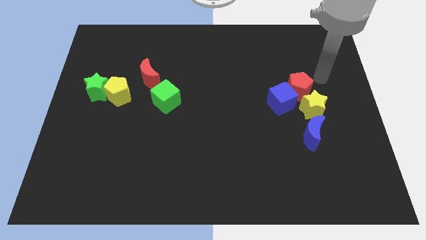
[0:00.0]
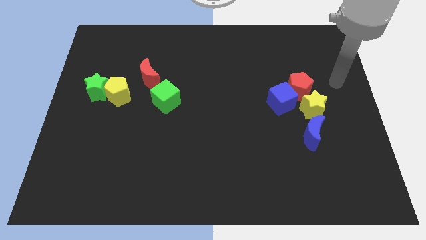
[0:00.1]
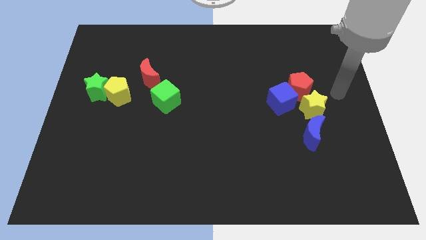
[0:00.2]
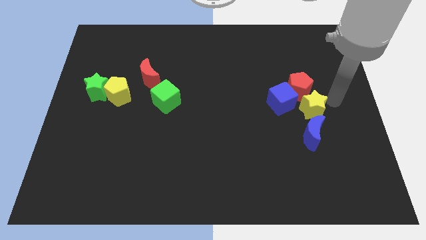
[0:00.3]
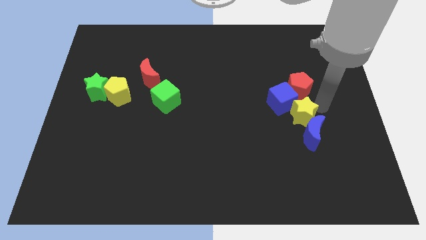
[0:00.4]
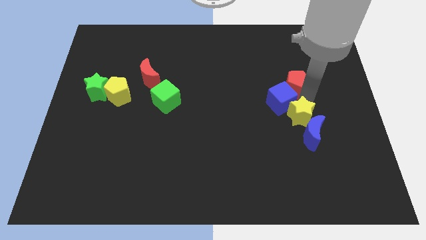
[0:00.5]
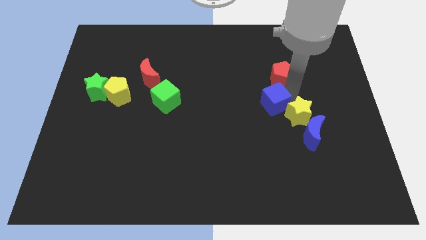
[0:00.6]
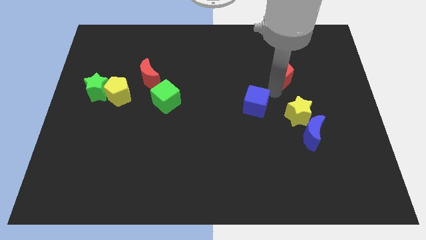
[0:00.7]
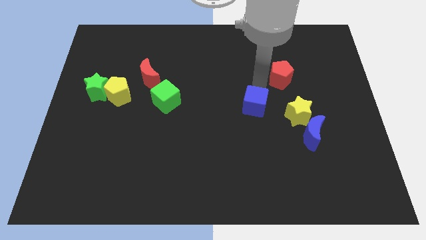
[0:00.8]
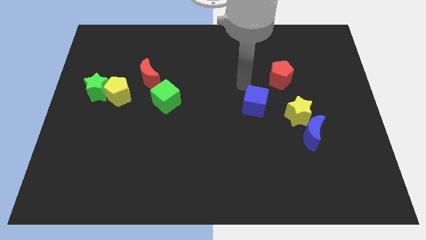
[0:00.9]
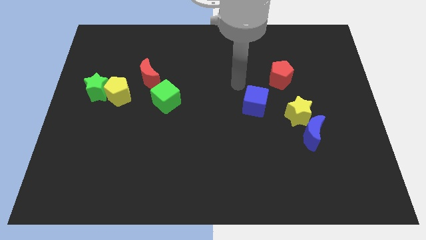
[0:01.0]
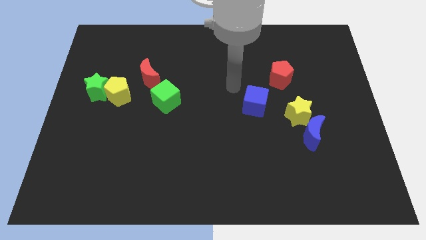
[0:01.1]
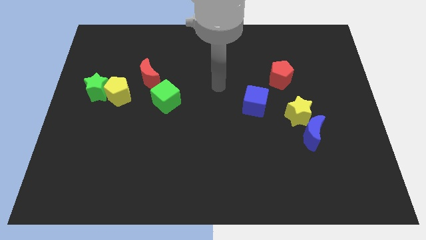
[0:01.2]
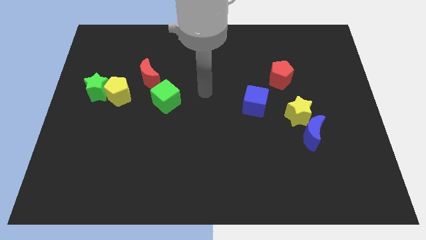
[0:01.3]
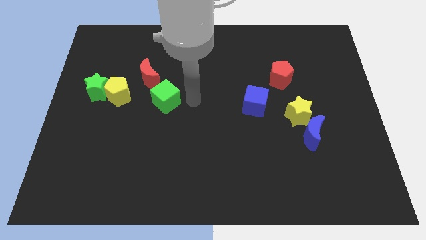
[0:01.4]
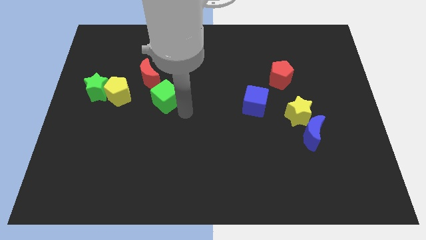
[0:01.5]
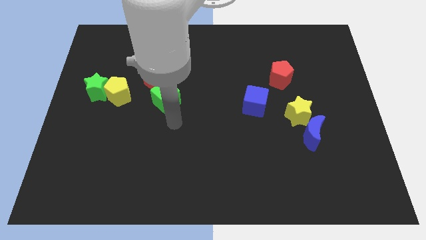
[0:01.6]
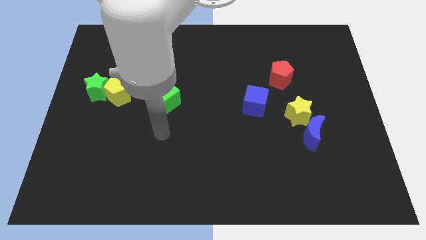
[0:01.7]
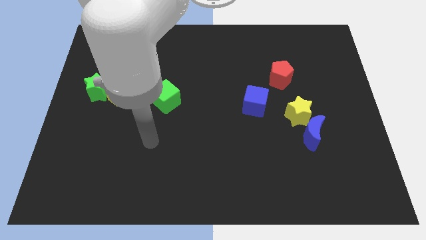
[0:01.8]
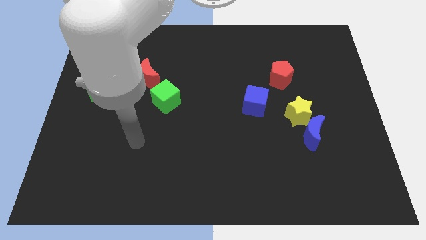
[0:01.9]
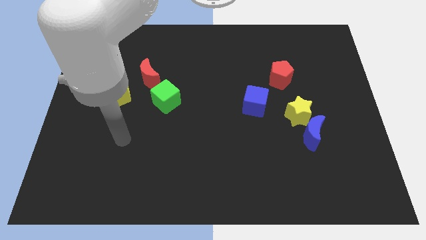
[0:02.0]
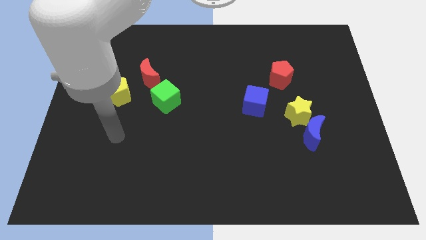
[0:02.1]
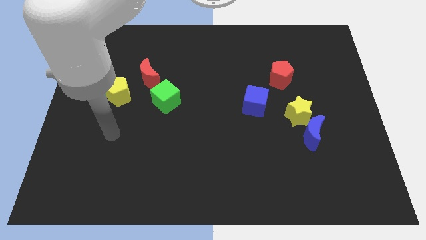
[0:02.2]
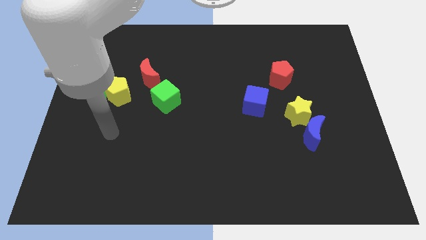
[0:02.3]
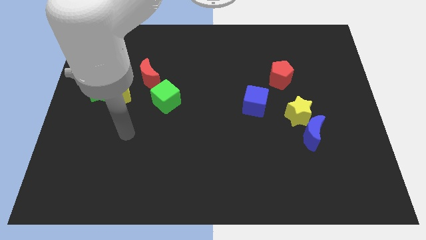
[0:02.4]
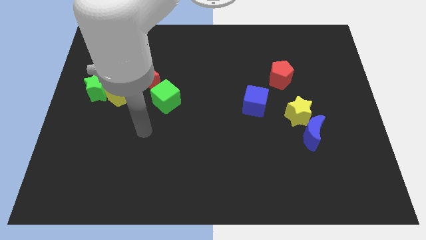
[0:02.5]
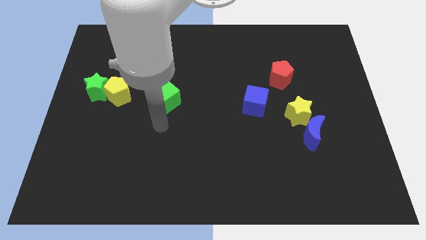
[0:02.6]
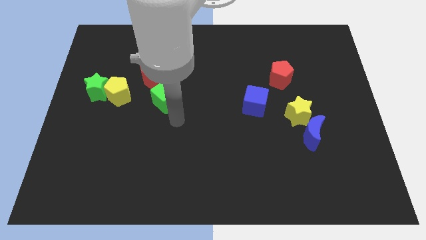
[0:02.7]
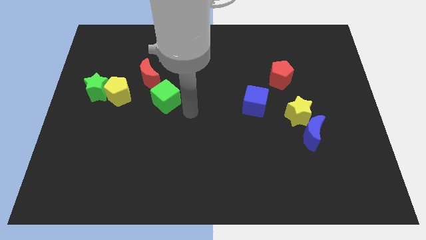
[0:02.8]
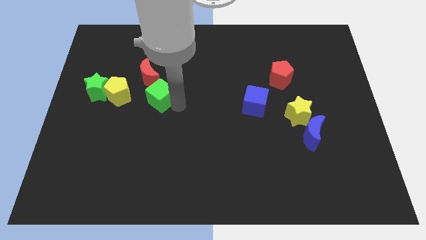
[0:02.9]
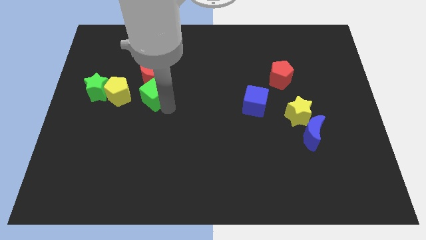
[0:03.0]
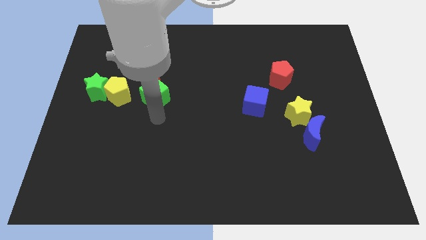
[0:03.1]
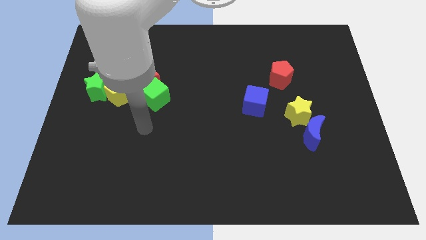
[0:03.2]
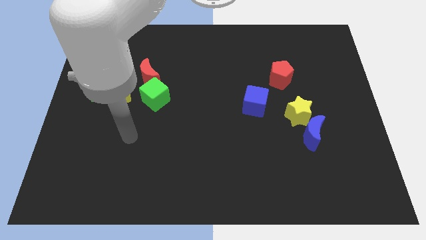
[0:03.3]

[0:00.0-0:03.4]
separate the red pentagon and blue cube

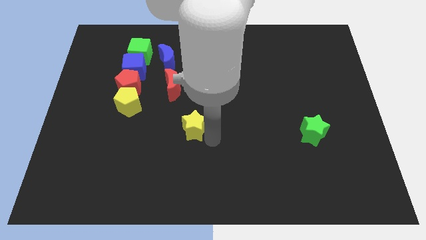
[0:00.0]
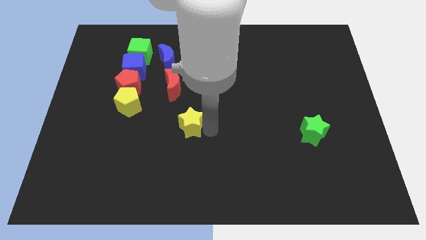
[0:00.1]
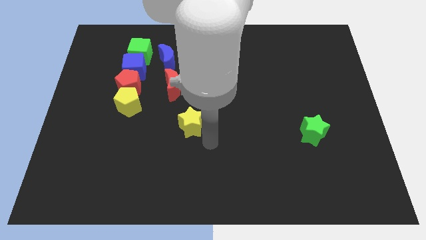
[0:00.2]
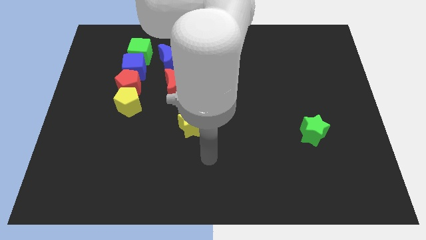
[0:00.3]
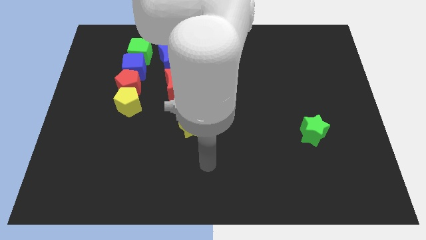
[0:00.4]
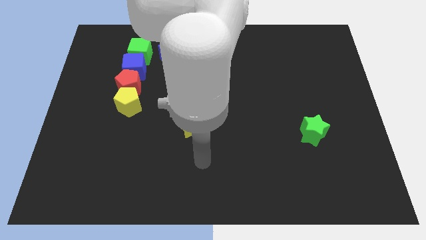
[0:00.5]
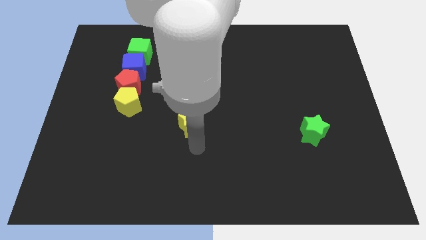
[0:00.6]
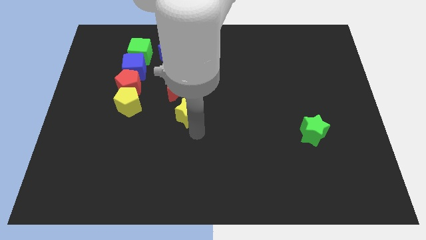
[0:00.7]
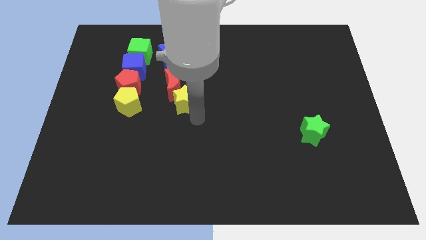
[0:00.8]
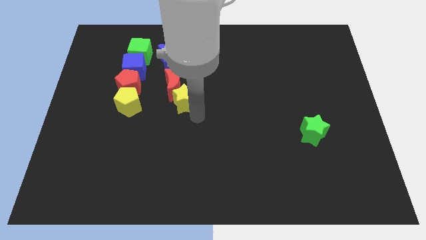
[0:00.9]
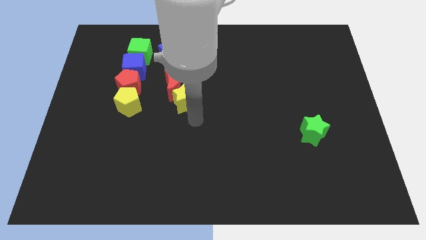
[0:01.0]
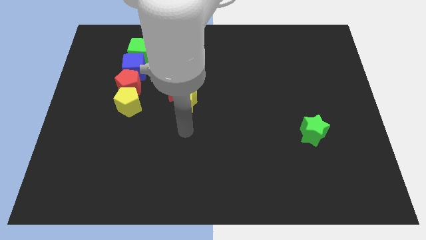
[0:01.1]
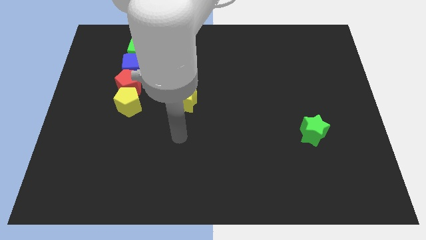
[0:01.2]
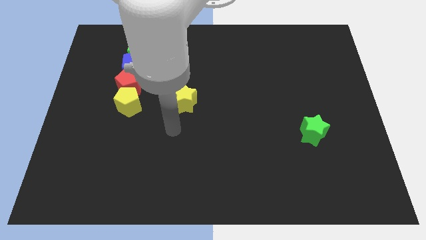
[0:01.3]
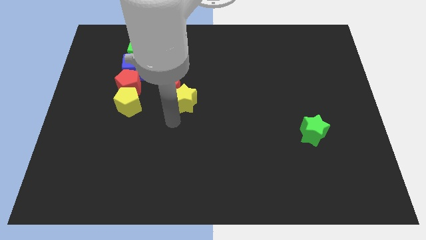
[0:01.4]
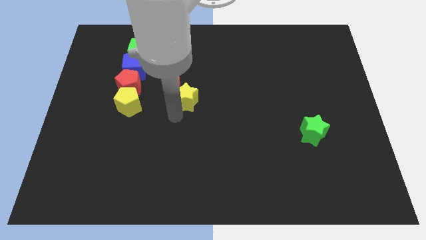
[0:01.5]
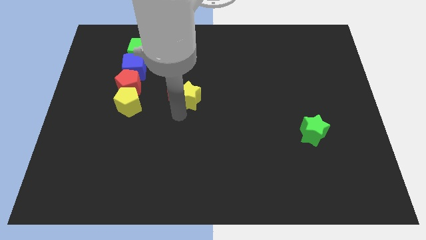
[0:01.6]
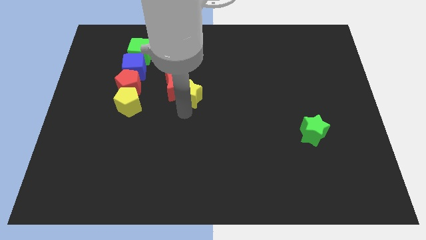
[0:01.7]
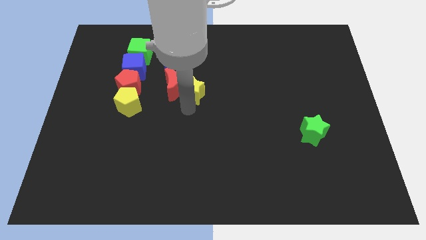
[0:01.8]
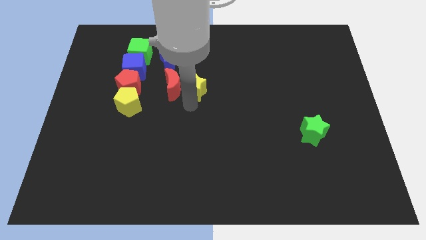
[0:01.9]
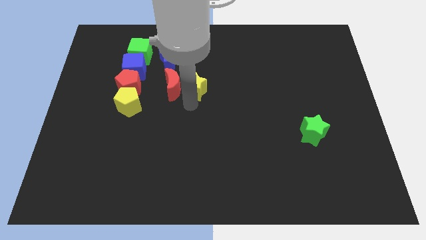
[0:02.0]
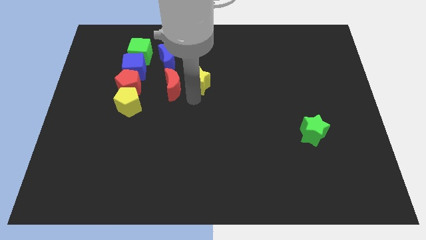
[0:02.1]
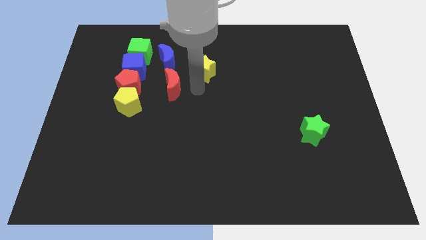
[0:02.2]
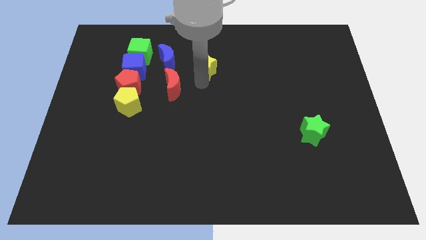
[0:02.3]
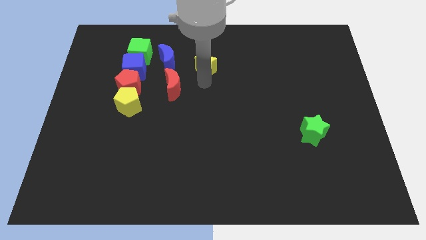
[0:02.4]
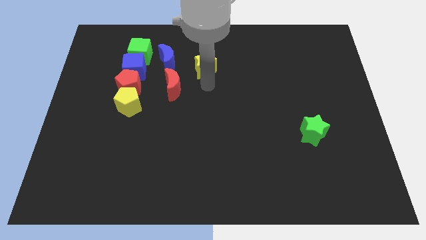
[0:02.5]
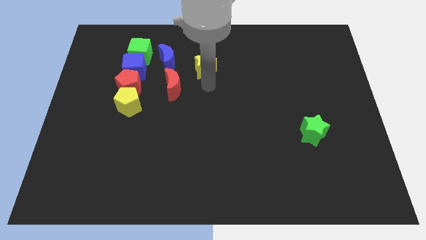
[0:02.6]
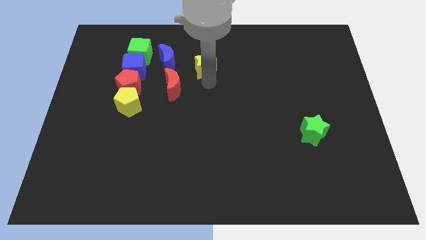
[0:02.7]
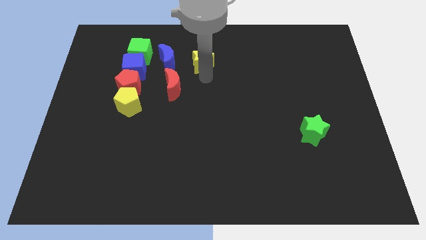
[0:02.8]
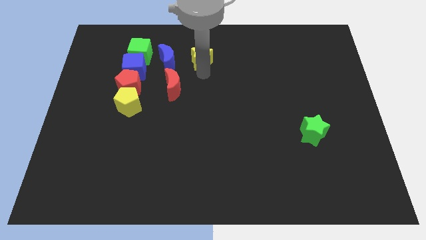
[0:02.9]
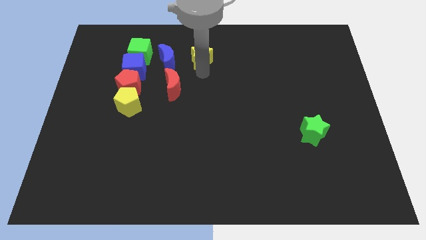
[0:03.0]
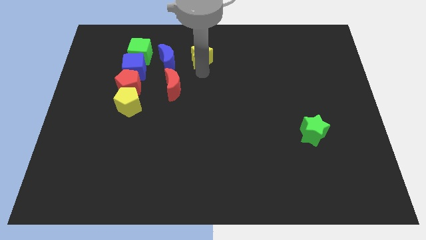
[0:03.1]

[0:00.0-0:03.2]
push the yellow star to right side of the blue moon

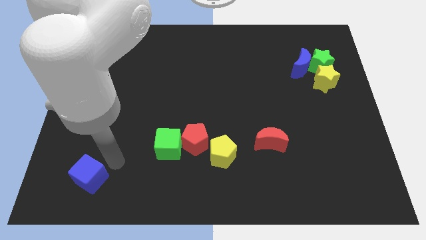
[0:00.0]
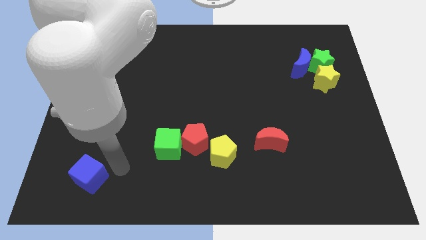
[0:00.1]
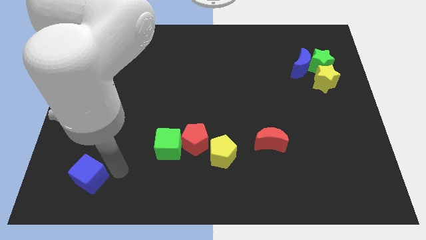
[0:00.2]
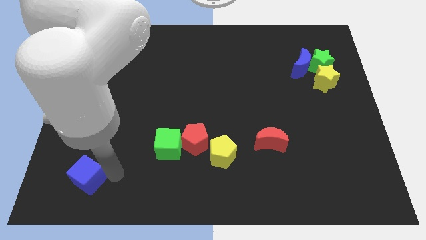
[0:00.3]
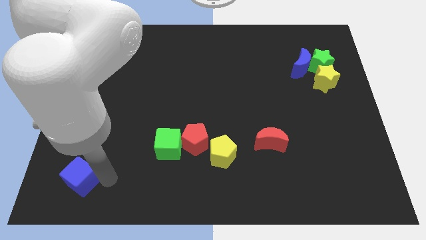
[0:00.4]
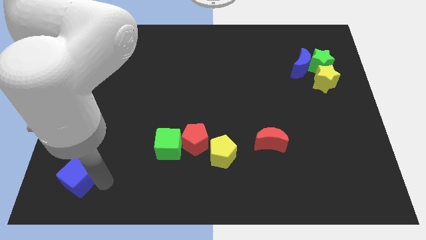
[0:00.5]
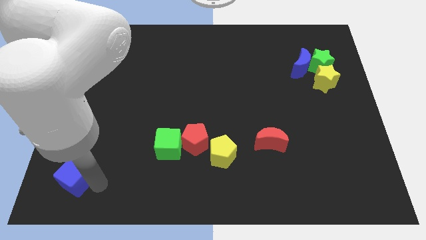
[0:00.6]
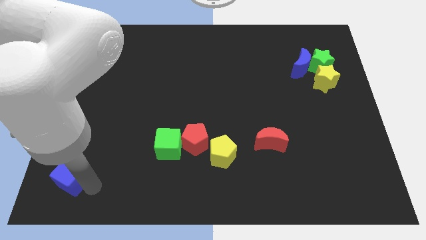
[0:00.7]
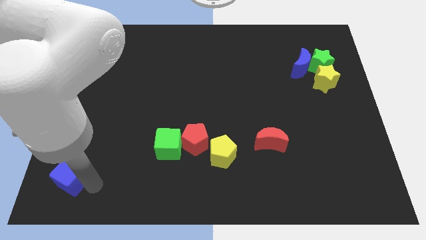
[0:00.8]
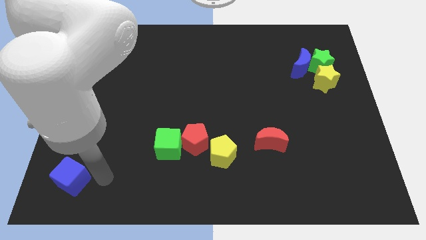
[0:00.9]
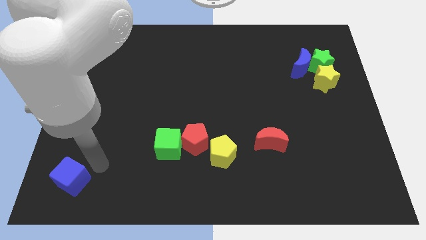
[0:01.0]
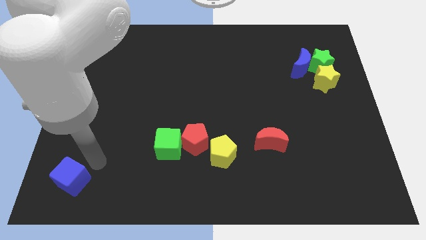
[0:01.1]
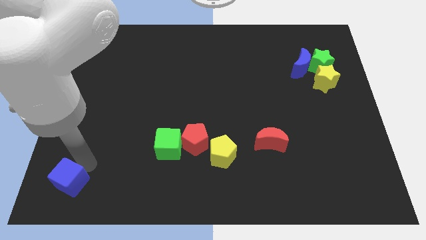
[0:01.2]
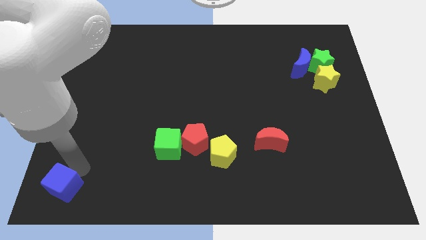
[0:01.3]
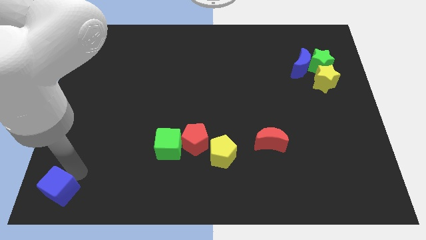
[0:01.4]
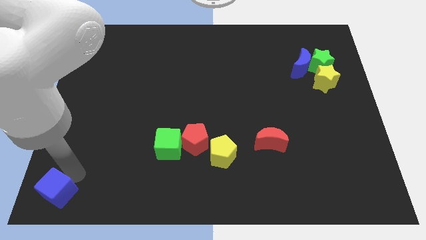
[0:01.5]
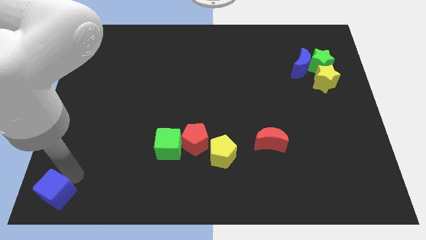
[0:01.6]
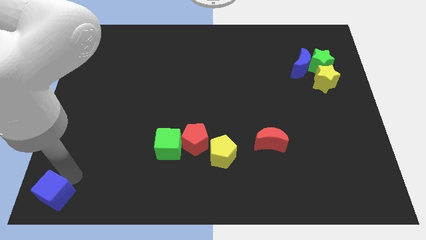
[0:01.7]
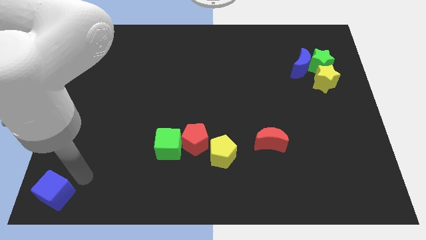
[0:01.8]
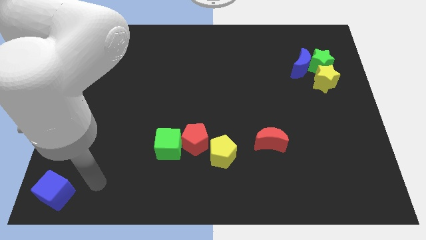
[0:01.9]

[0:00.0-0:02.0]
move the blue cube to the bottom left corner of the board

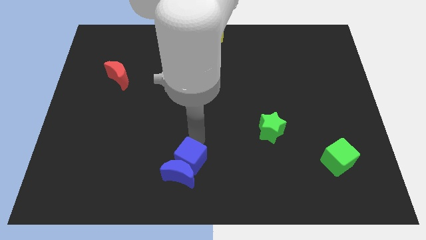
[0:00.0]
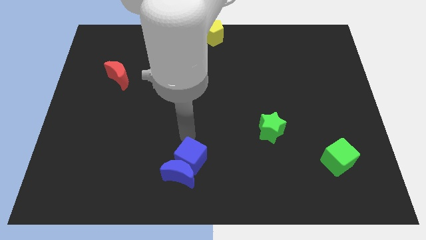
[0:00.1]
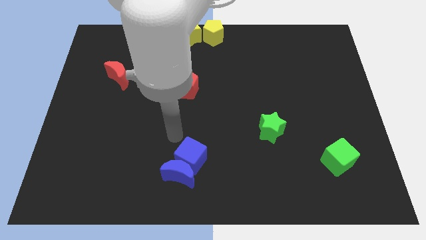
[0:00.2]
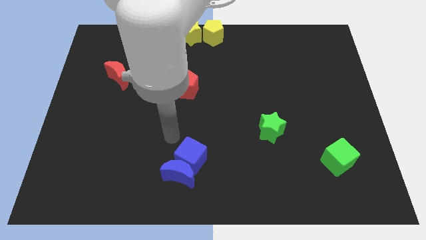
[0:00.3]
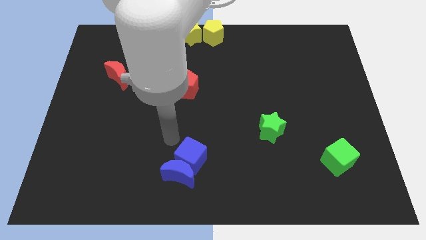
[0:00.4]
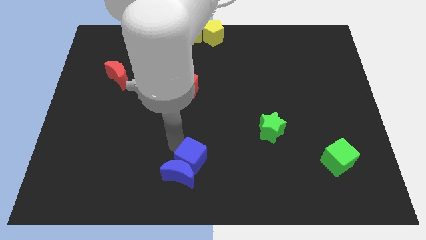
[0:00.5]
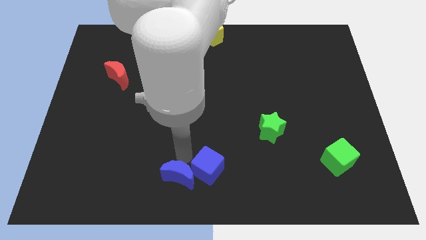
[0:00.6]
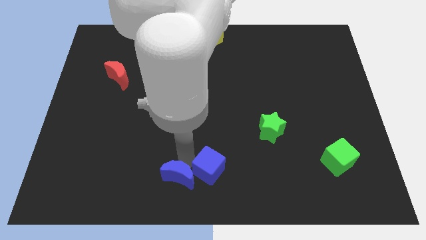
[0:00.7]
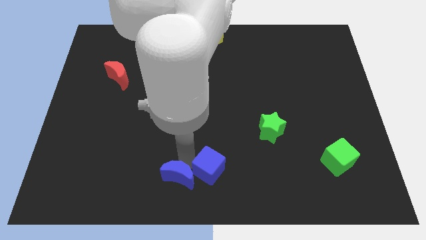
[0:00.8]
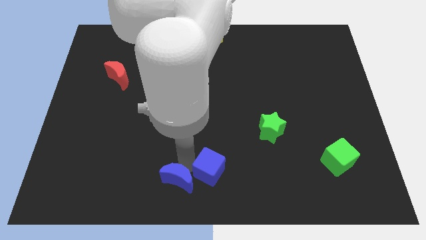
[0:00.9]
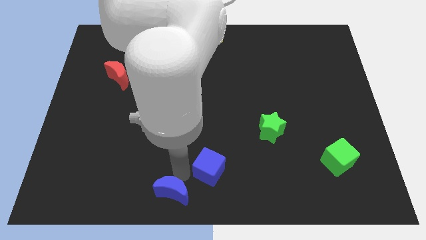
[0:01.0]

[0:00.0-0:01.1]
place your hand in between the blue blocks
